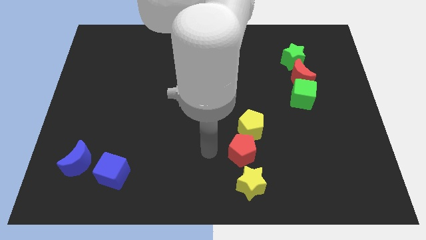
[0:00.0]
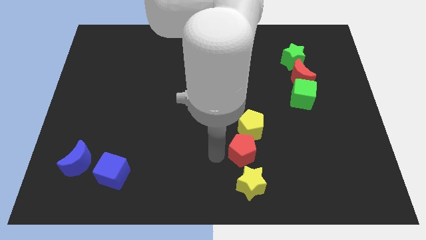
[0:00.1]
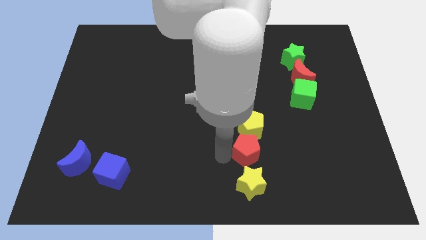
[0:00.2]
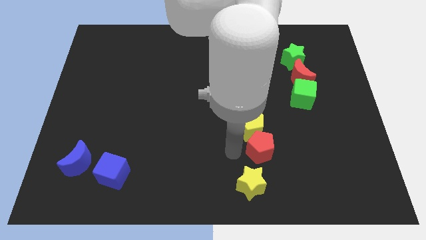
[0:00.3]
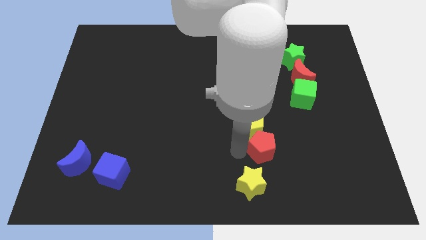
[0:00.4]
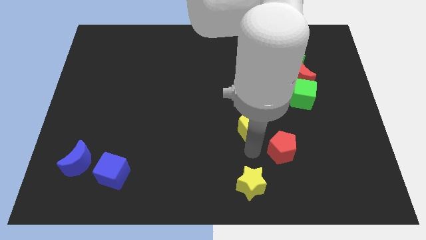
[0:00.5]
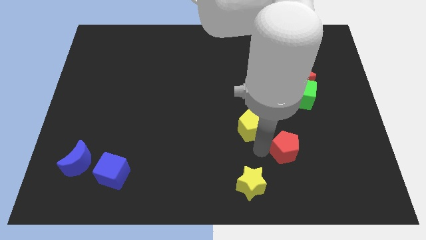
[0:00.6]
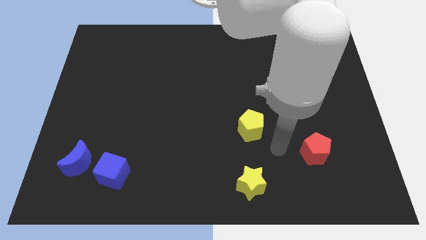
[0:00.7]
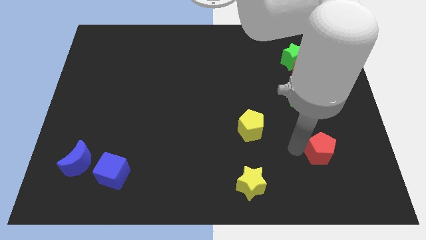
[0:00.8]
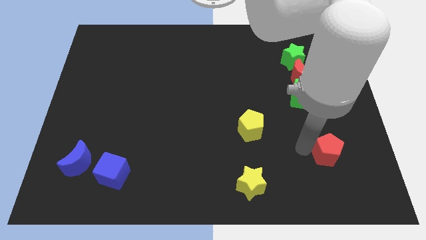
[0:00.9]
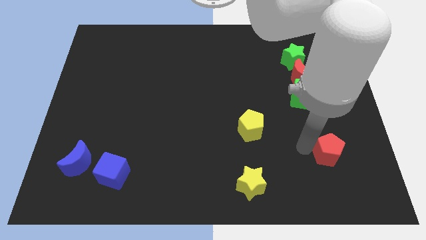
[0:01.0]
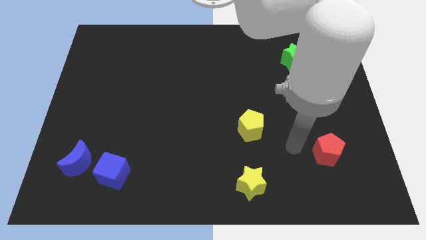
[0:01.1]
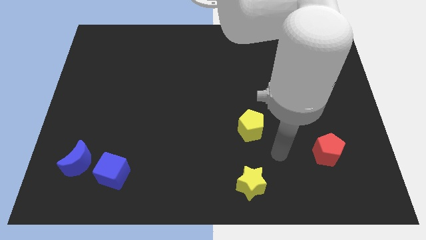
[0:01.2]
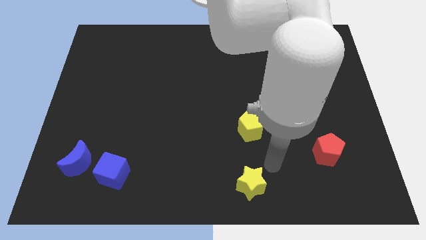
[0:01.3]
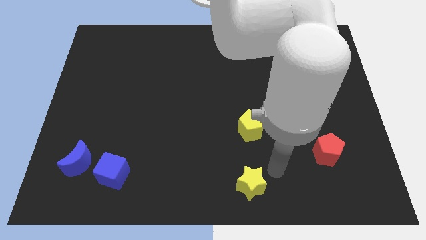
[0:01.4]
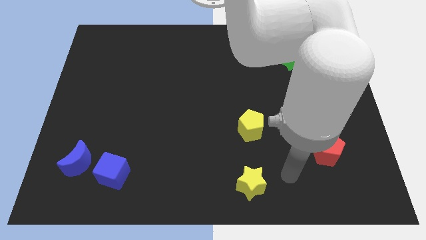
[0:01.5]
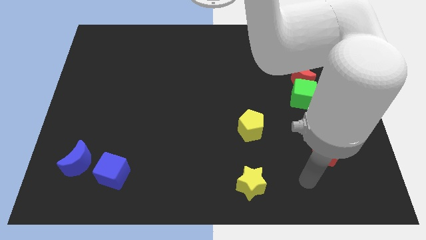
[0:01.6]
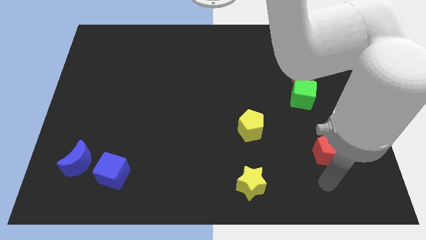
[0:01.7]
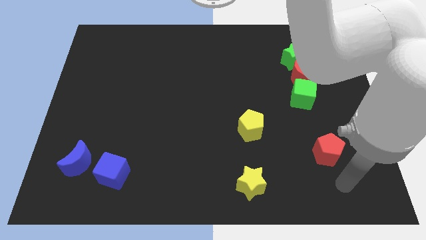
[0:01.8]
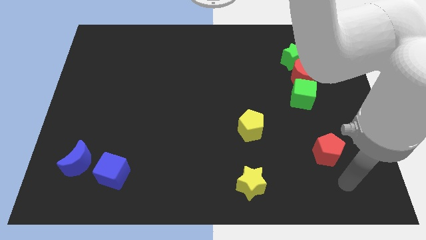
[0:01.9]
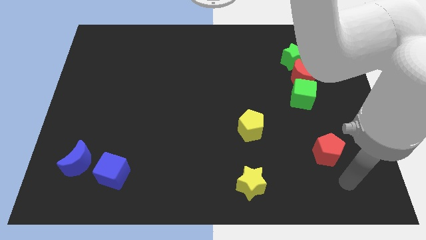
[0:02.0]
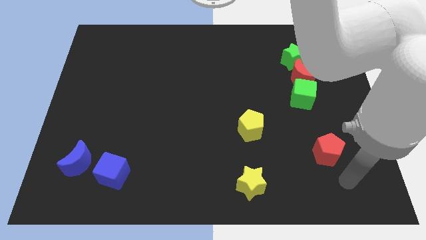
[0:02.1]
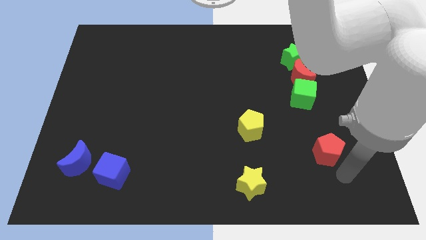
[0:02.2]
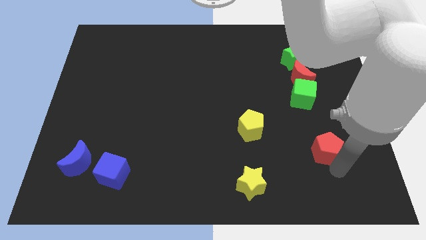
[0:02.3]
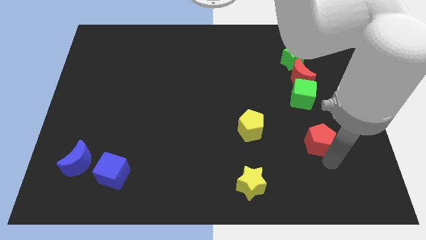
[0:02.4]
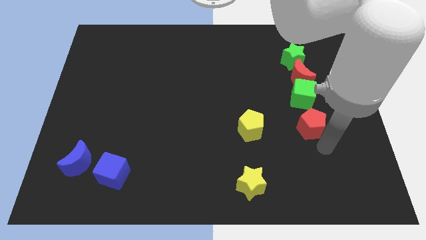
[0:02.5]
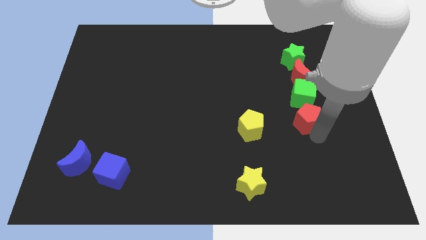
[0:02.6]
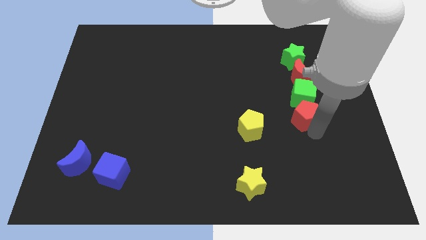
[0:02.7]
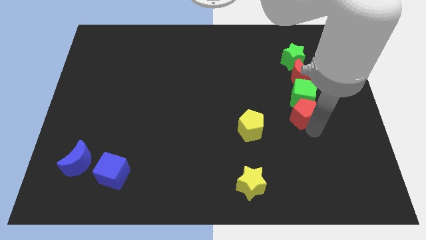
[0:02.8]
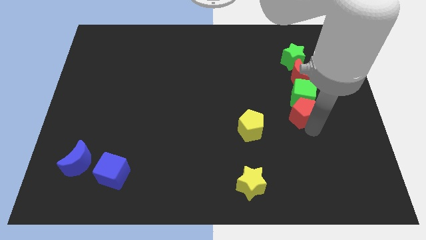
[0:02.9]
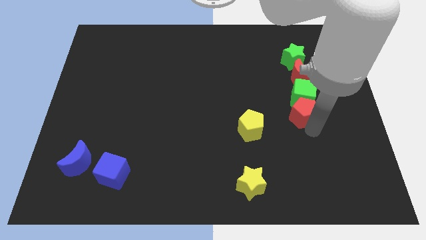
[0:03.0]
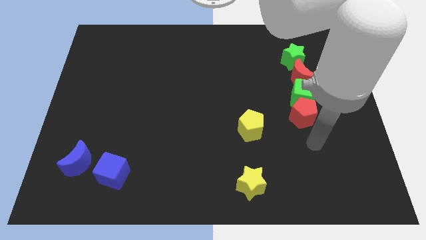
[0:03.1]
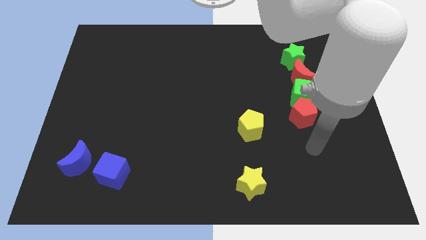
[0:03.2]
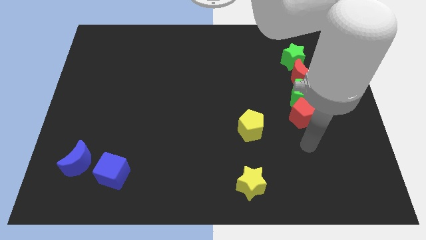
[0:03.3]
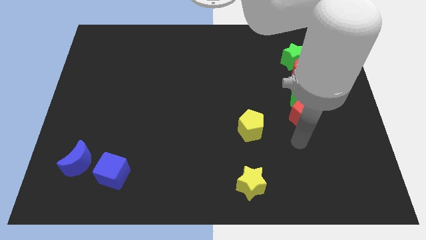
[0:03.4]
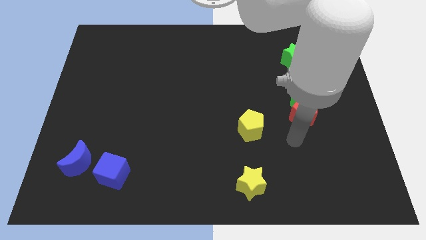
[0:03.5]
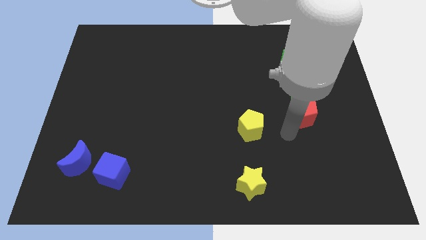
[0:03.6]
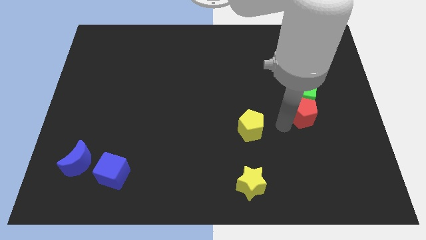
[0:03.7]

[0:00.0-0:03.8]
move the red pentagon below the green cube

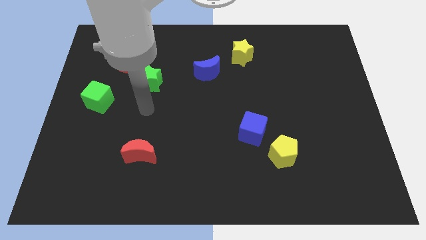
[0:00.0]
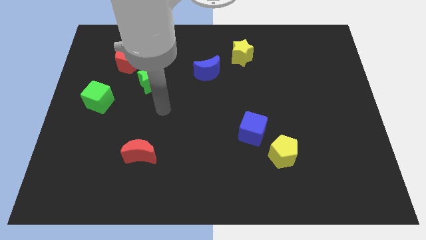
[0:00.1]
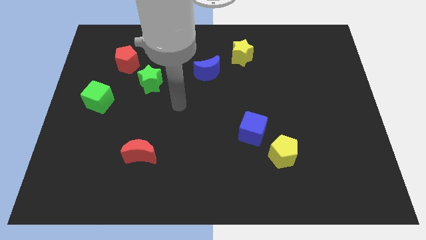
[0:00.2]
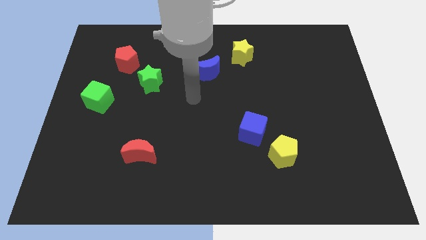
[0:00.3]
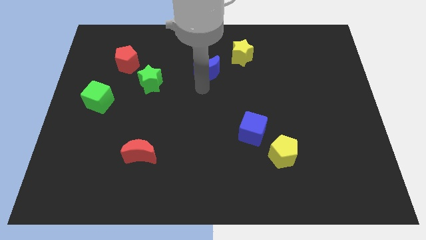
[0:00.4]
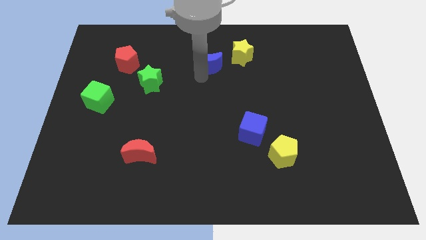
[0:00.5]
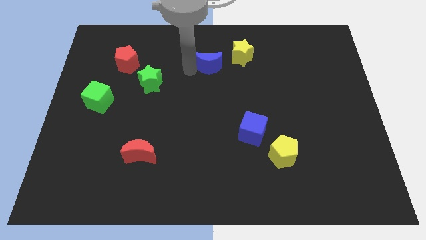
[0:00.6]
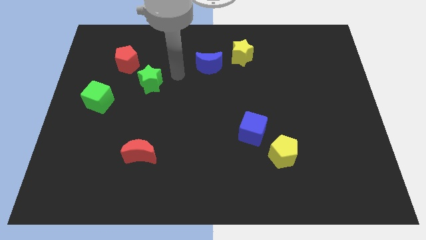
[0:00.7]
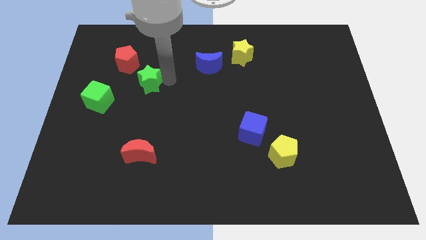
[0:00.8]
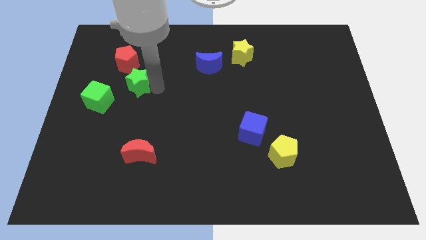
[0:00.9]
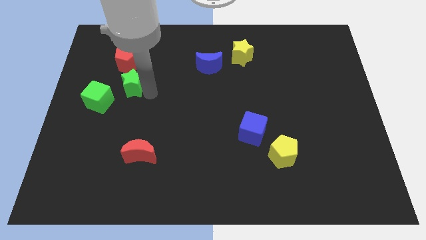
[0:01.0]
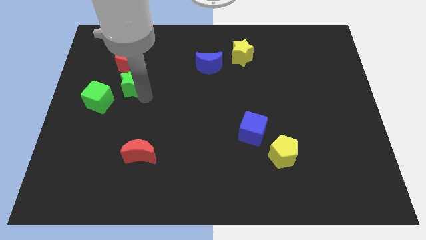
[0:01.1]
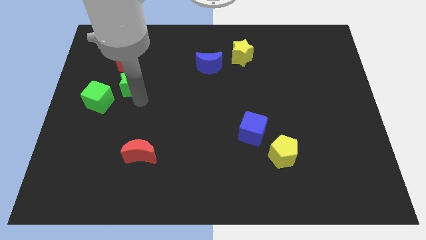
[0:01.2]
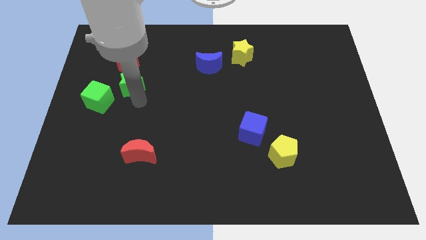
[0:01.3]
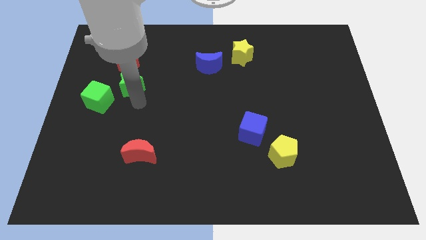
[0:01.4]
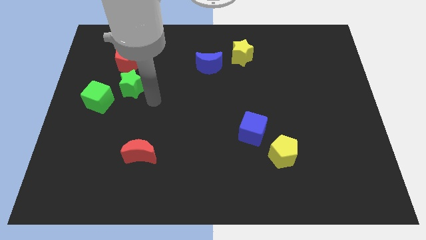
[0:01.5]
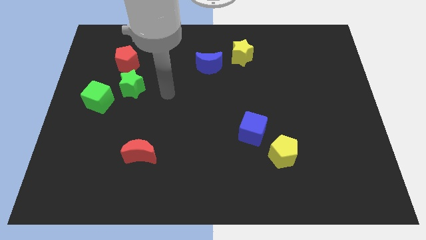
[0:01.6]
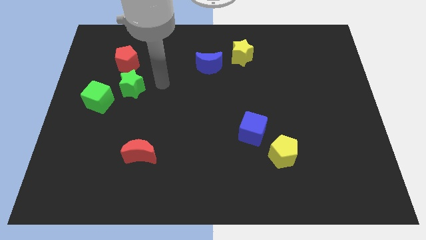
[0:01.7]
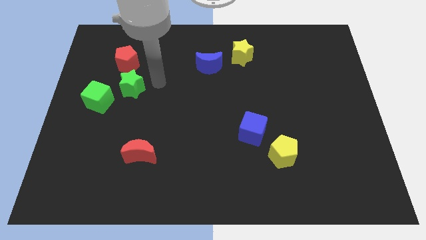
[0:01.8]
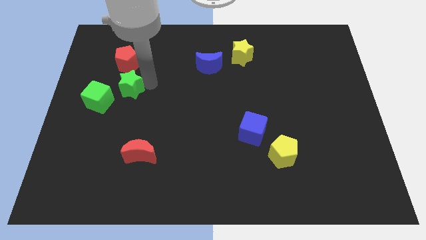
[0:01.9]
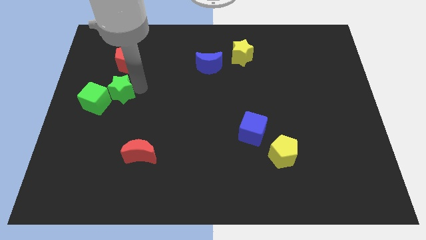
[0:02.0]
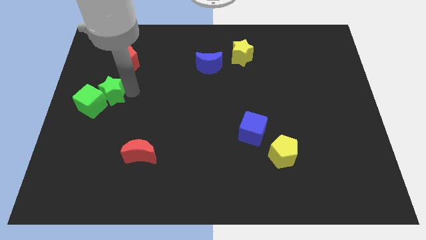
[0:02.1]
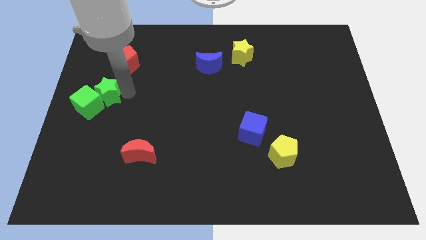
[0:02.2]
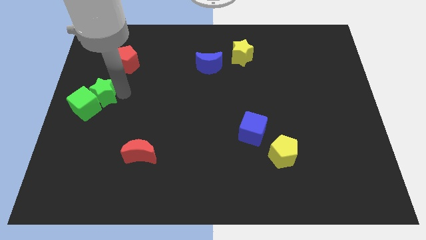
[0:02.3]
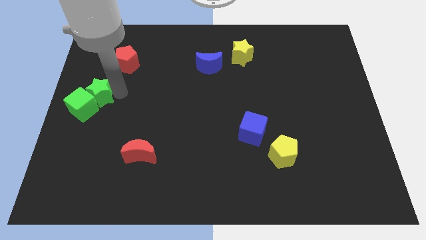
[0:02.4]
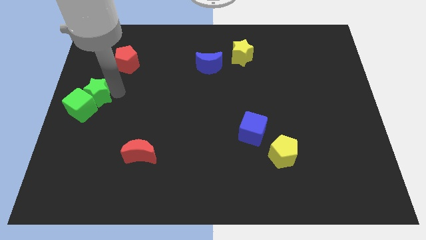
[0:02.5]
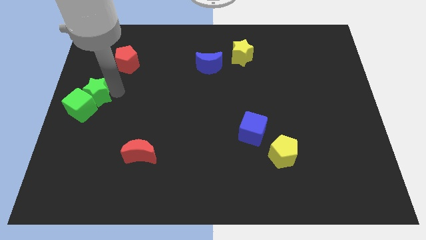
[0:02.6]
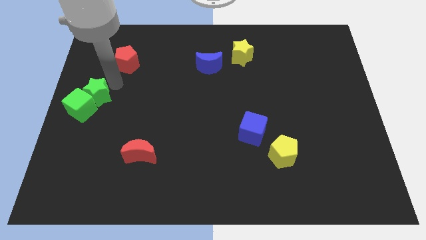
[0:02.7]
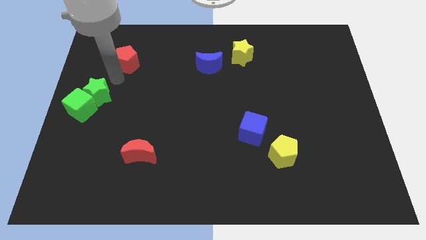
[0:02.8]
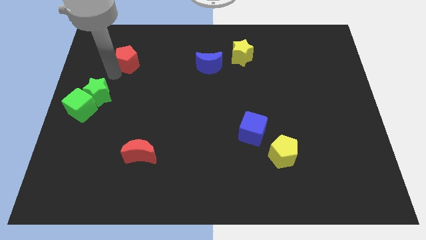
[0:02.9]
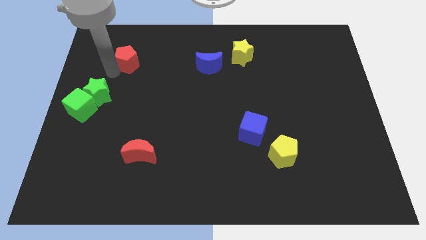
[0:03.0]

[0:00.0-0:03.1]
push the green blocks towards center left

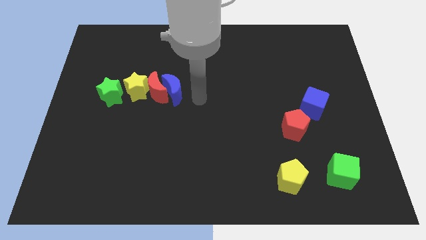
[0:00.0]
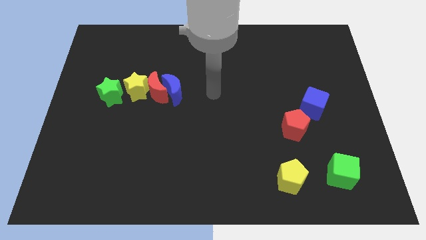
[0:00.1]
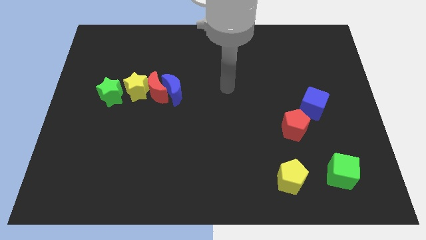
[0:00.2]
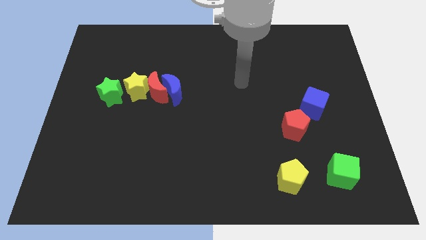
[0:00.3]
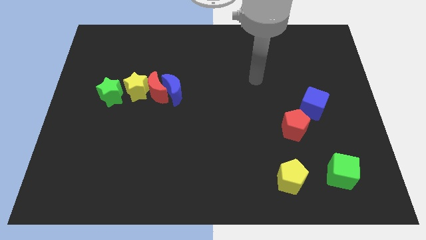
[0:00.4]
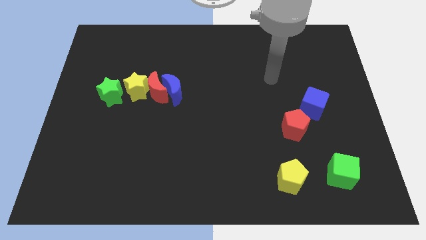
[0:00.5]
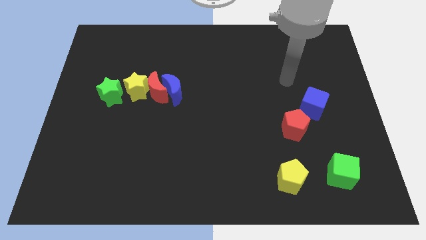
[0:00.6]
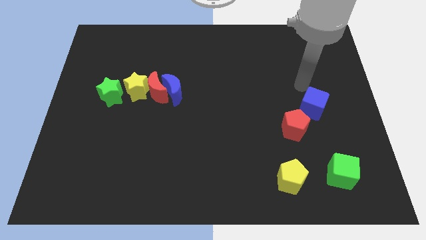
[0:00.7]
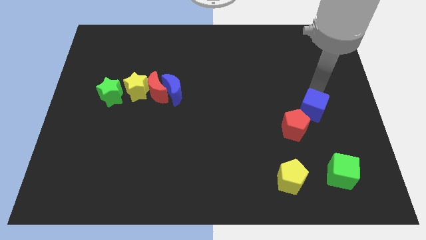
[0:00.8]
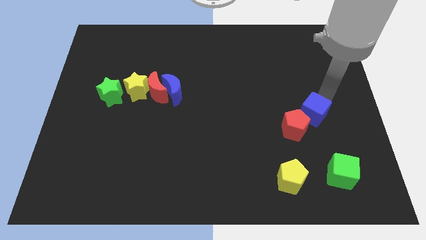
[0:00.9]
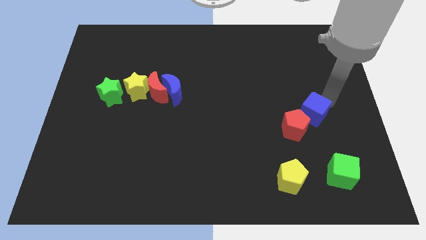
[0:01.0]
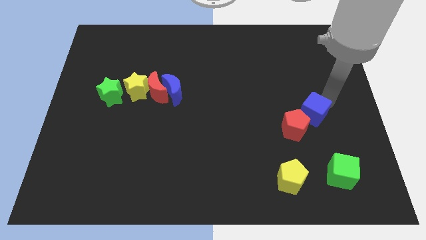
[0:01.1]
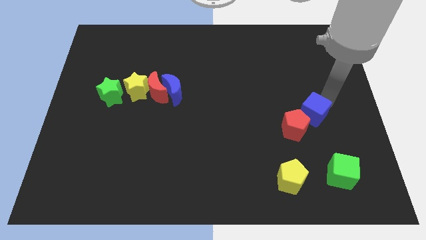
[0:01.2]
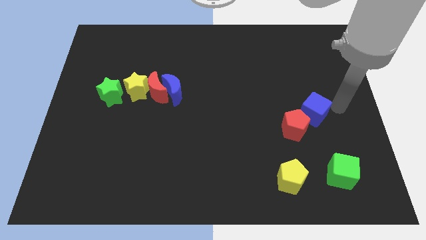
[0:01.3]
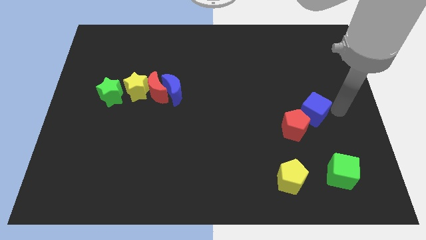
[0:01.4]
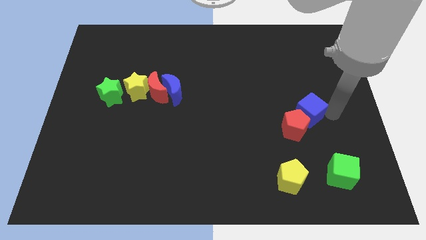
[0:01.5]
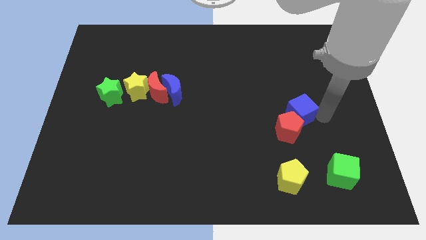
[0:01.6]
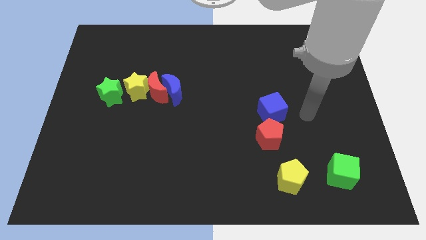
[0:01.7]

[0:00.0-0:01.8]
put the blue cube above the red pentagon
